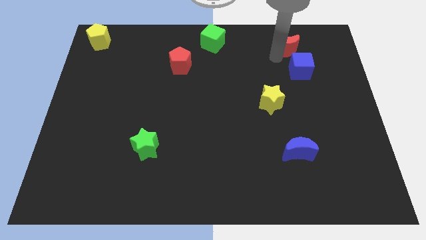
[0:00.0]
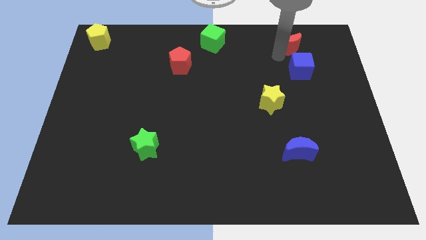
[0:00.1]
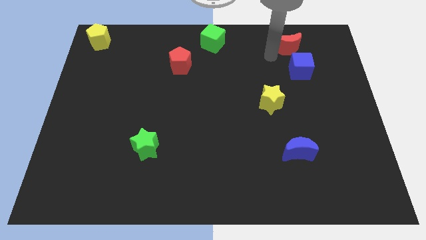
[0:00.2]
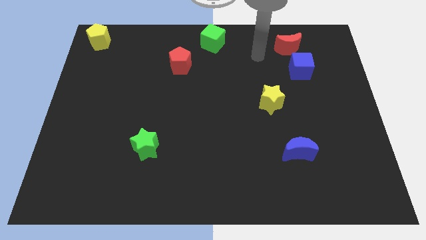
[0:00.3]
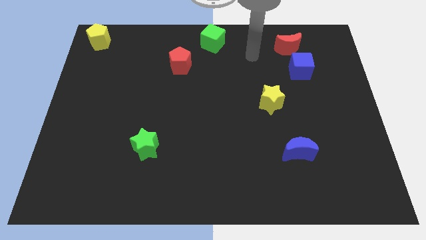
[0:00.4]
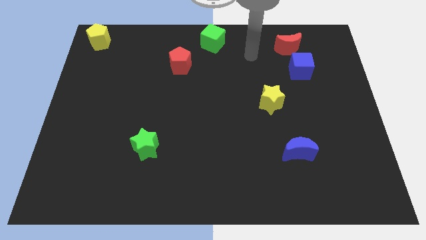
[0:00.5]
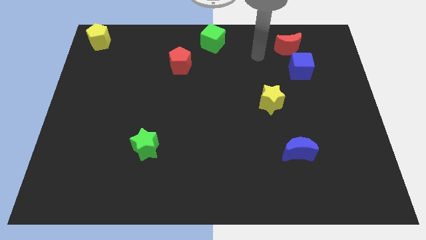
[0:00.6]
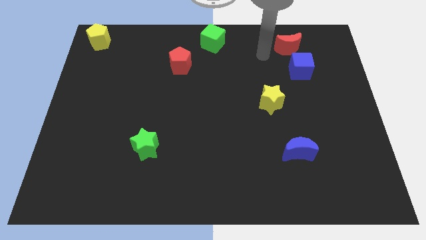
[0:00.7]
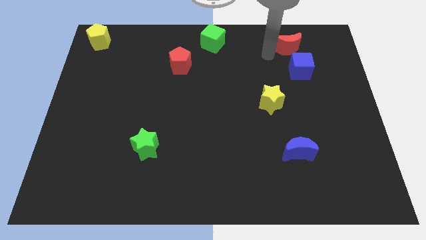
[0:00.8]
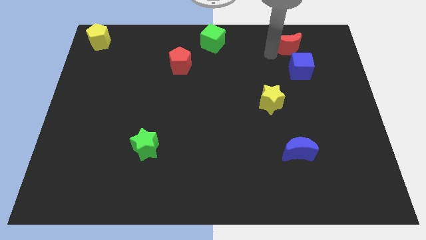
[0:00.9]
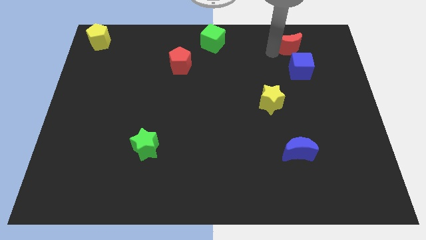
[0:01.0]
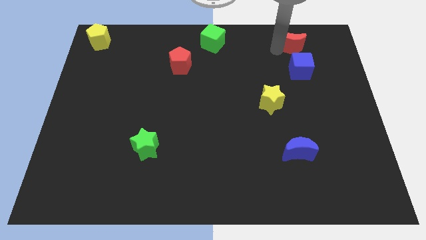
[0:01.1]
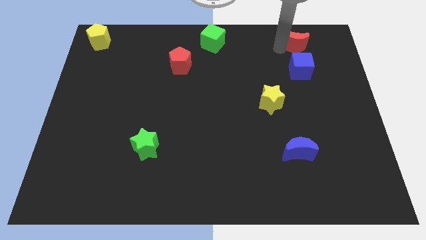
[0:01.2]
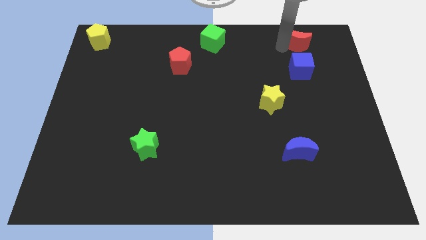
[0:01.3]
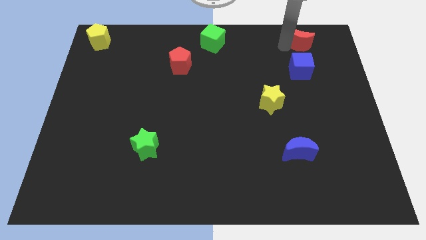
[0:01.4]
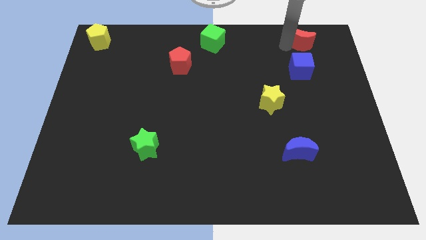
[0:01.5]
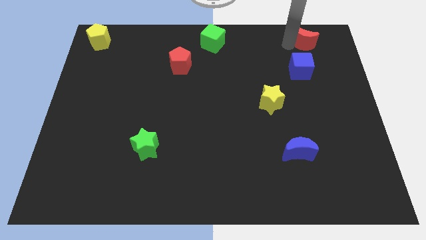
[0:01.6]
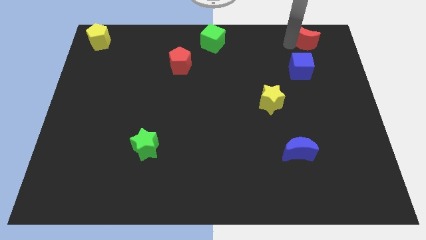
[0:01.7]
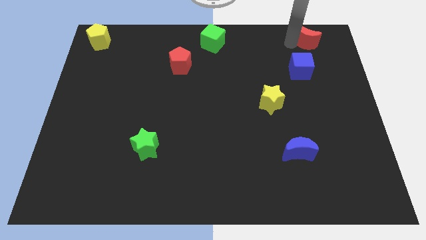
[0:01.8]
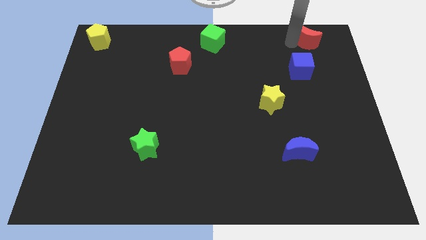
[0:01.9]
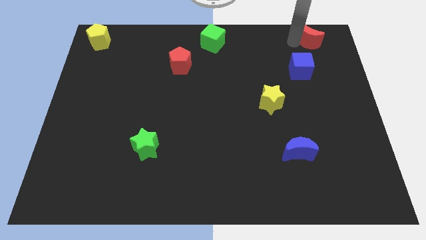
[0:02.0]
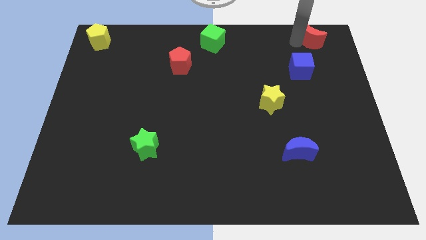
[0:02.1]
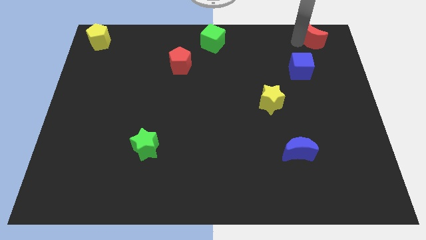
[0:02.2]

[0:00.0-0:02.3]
move the red crescent towards top right corner of the board

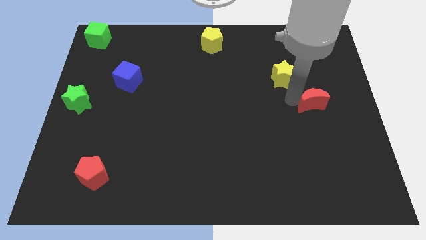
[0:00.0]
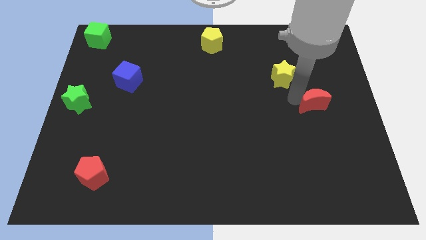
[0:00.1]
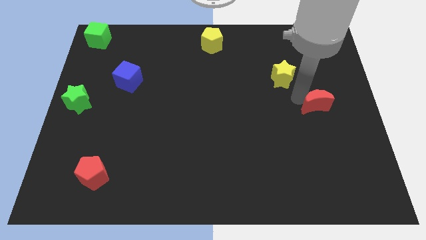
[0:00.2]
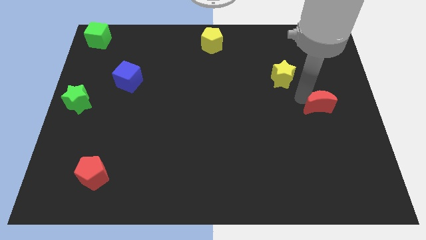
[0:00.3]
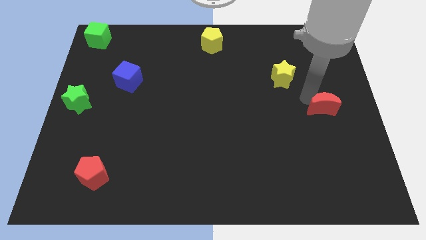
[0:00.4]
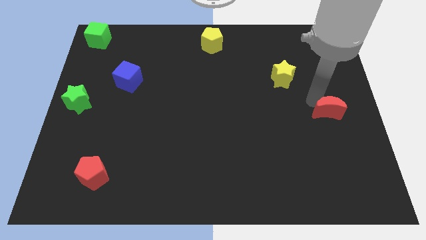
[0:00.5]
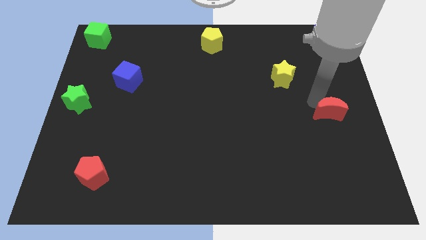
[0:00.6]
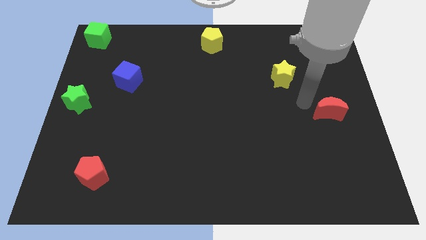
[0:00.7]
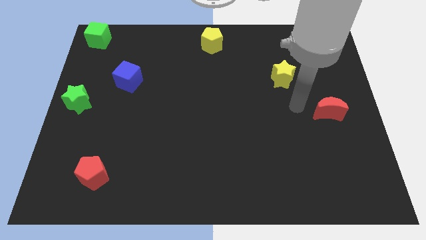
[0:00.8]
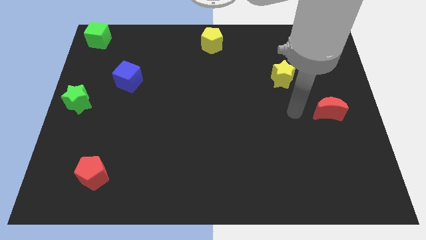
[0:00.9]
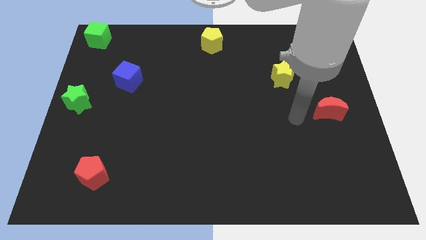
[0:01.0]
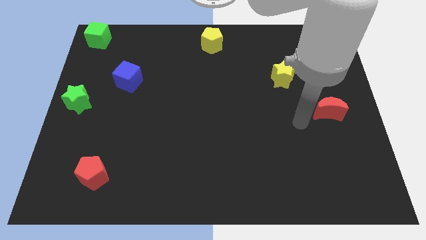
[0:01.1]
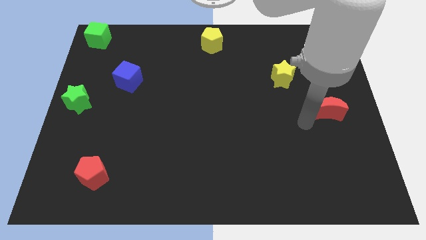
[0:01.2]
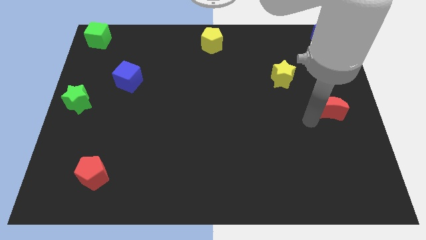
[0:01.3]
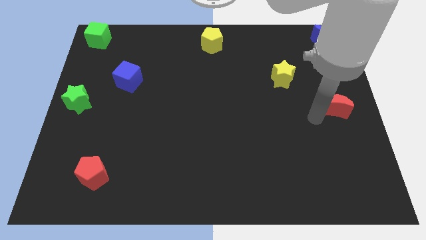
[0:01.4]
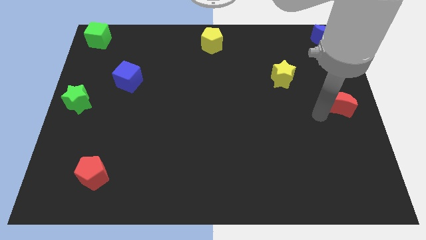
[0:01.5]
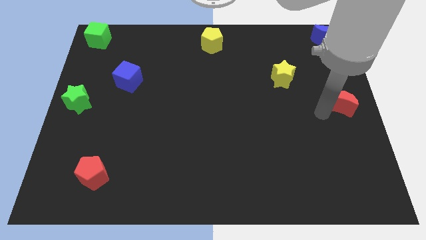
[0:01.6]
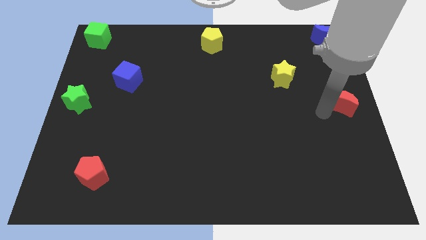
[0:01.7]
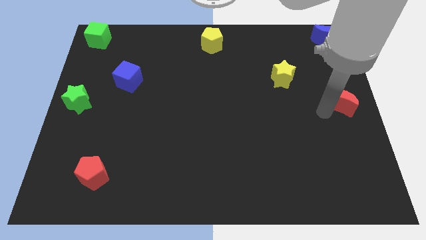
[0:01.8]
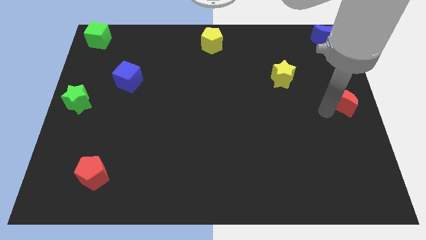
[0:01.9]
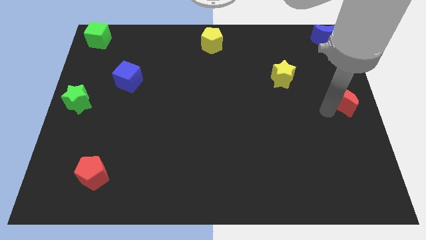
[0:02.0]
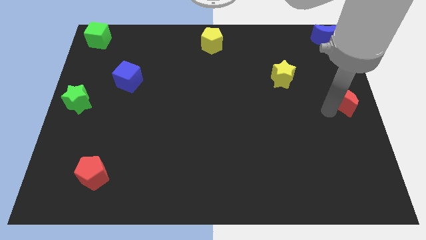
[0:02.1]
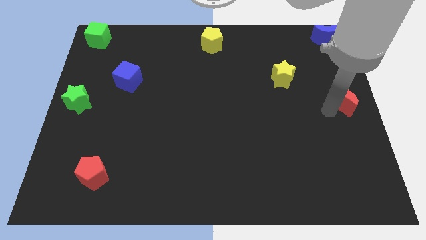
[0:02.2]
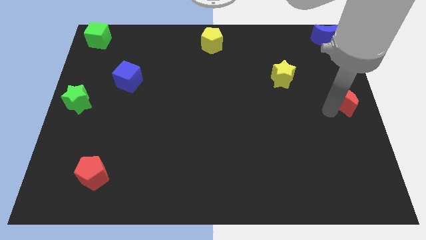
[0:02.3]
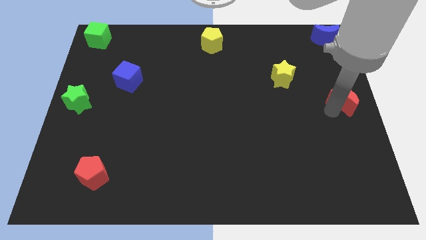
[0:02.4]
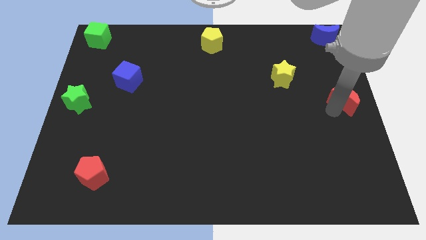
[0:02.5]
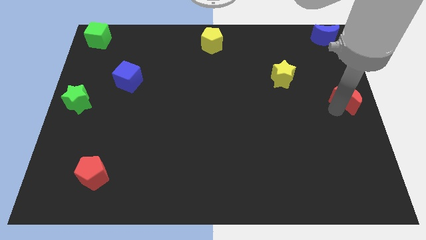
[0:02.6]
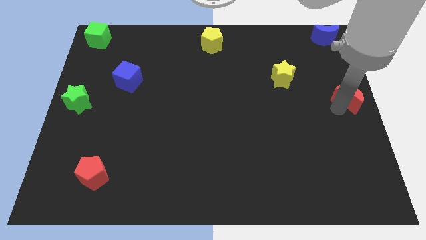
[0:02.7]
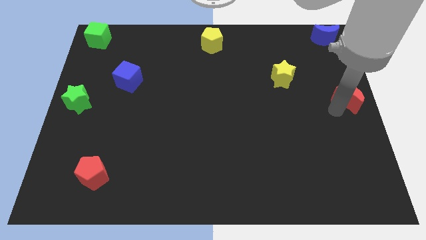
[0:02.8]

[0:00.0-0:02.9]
place the red moon at the right center of the board

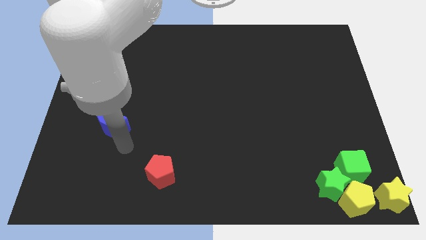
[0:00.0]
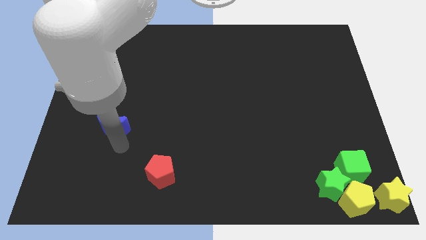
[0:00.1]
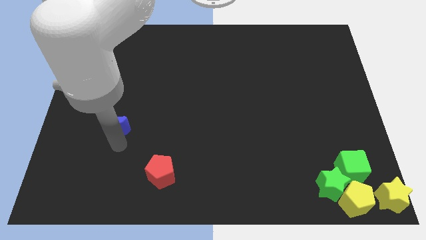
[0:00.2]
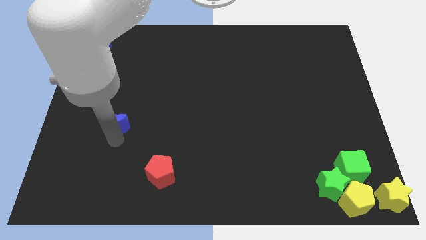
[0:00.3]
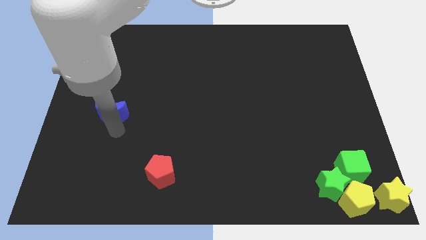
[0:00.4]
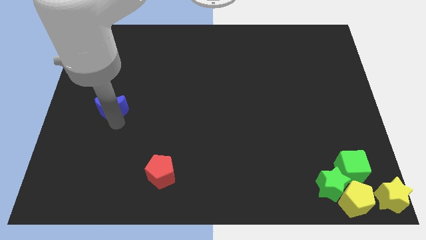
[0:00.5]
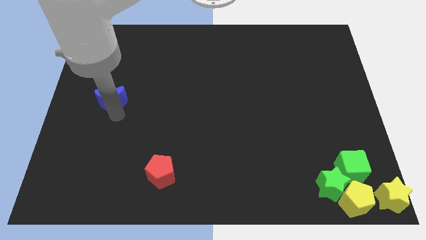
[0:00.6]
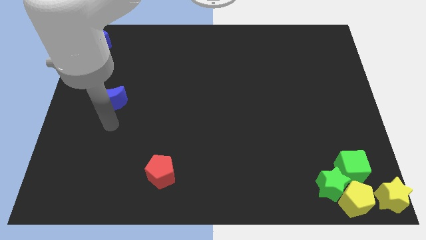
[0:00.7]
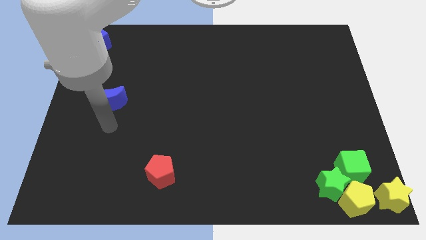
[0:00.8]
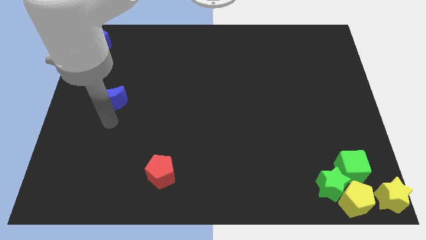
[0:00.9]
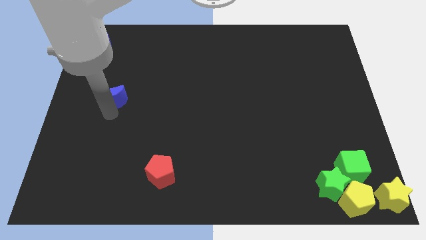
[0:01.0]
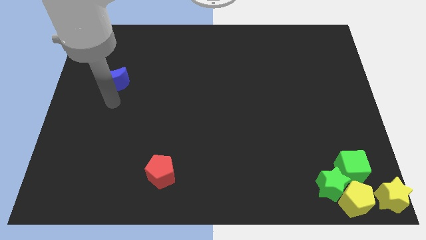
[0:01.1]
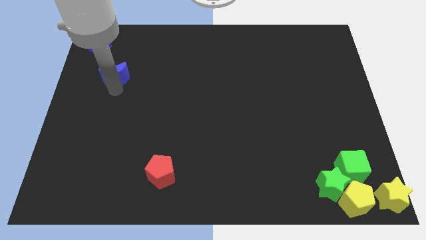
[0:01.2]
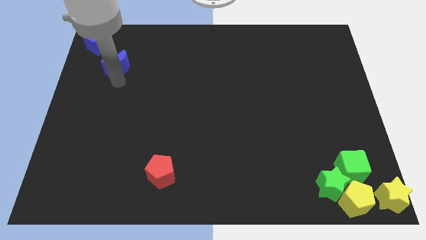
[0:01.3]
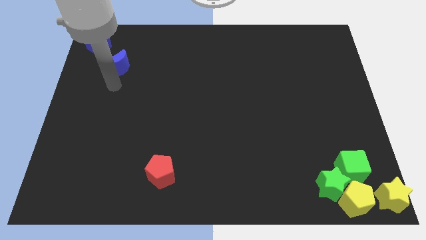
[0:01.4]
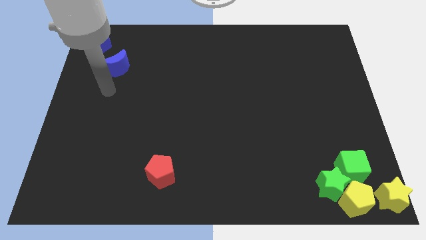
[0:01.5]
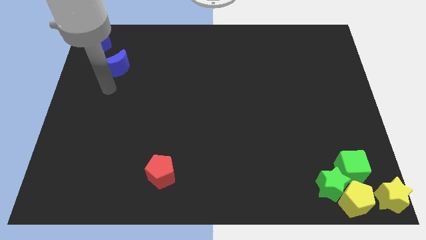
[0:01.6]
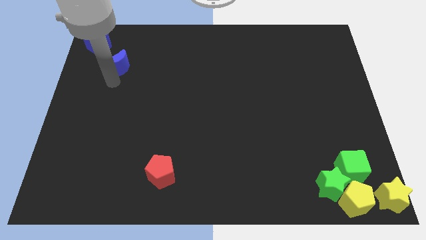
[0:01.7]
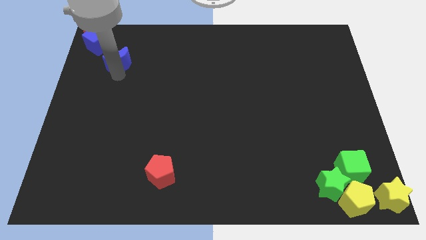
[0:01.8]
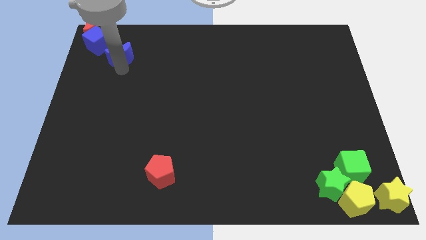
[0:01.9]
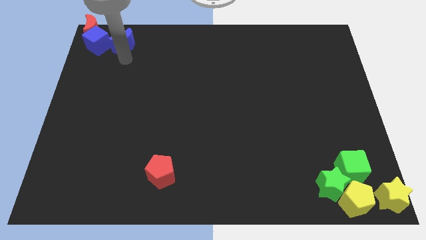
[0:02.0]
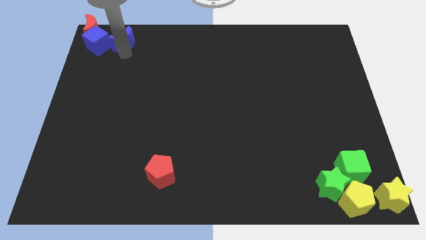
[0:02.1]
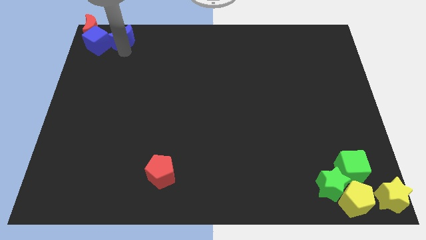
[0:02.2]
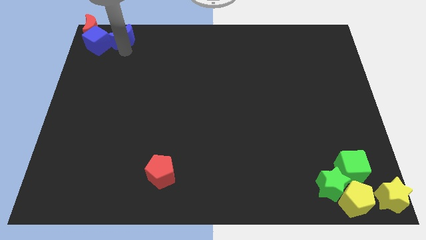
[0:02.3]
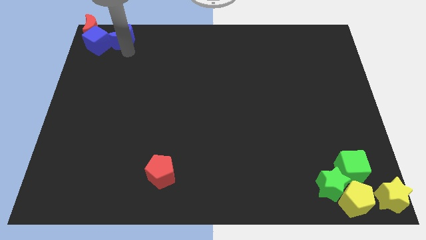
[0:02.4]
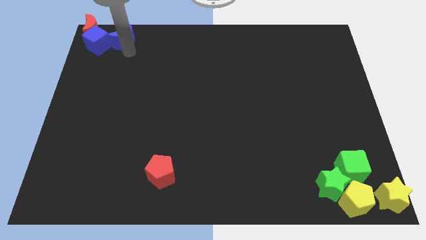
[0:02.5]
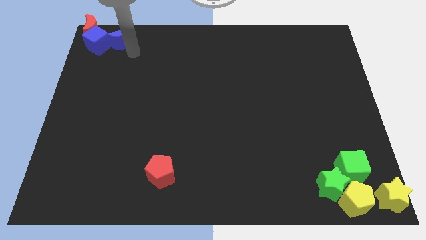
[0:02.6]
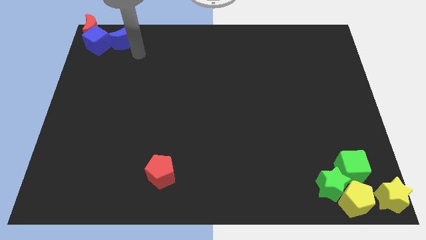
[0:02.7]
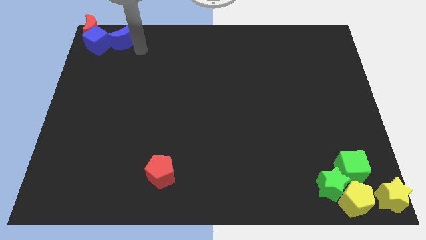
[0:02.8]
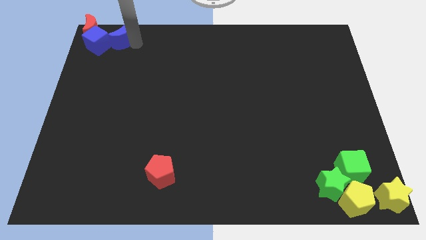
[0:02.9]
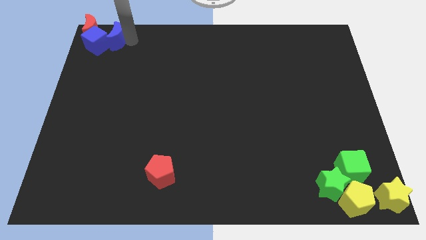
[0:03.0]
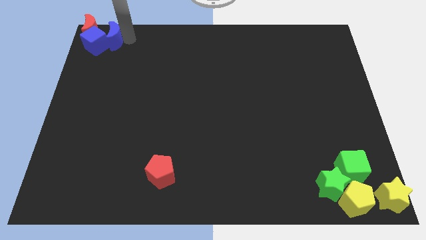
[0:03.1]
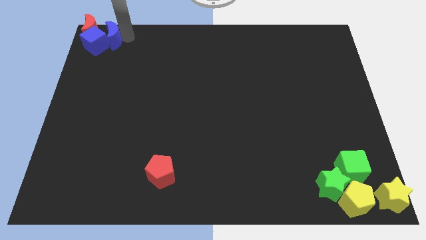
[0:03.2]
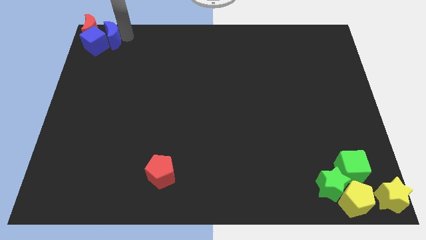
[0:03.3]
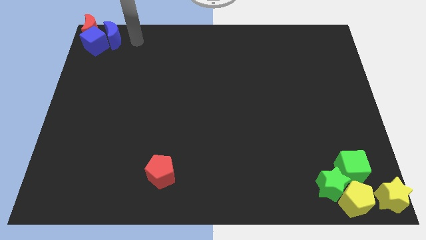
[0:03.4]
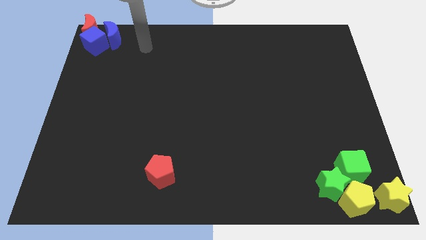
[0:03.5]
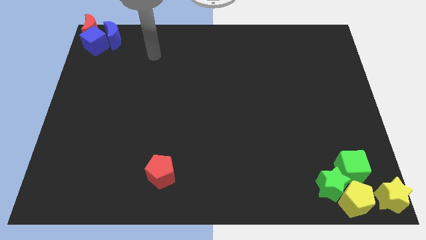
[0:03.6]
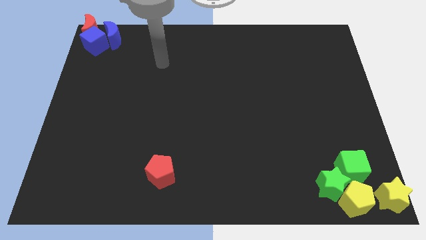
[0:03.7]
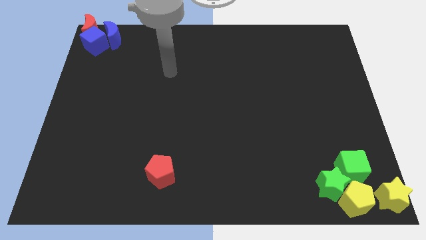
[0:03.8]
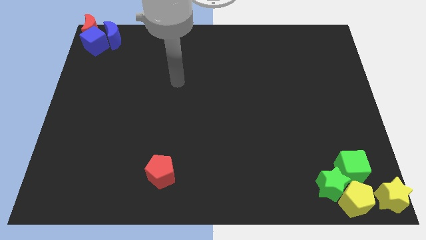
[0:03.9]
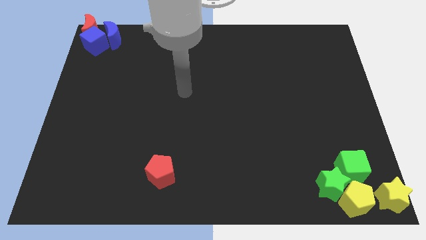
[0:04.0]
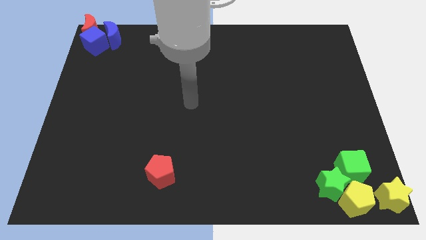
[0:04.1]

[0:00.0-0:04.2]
push the blue moon into the blue cube
